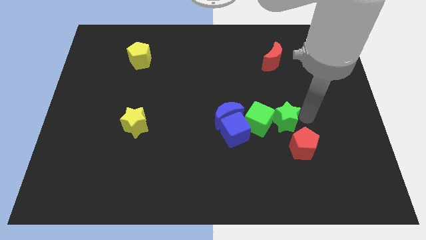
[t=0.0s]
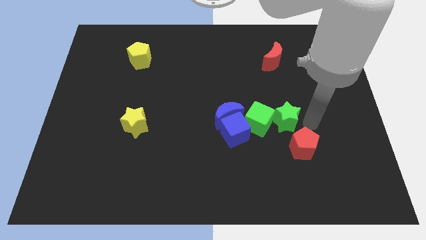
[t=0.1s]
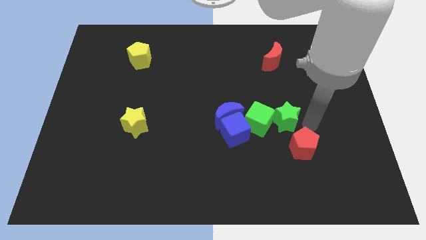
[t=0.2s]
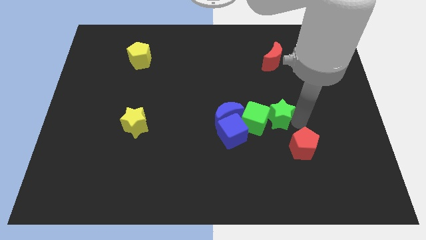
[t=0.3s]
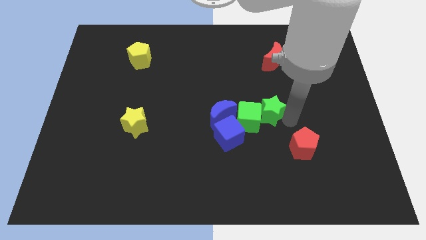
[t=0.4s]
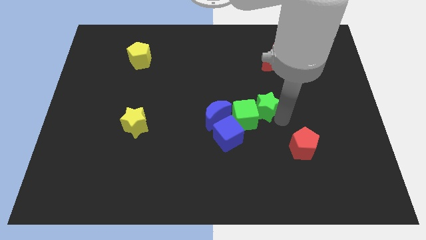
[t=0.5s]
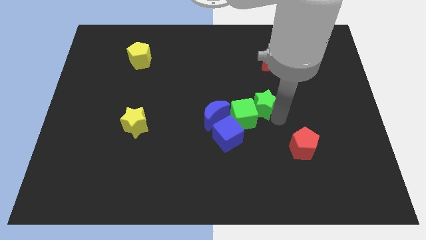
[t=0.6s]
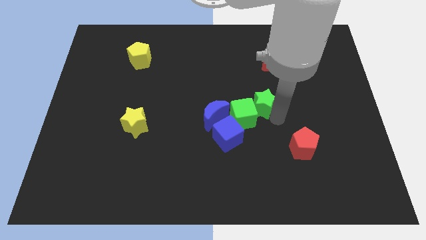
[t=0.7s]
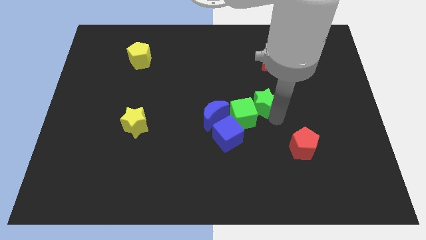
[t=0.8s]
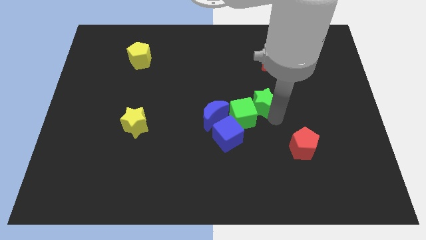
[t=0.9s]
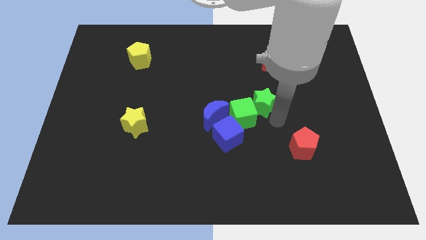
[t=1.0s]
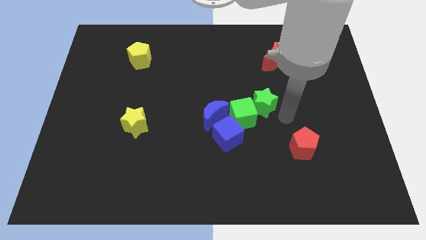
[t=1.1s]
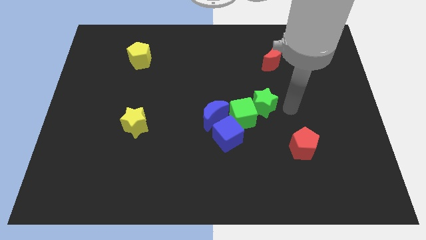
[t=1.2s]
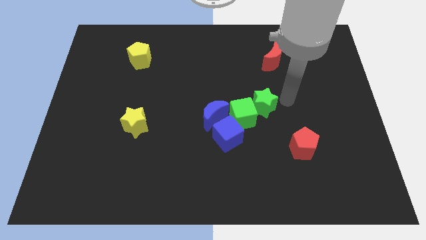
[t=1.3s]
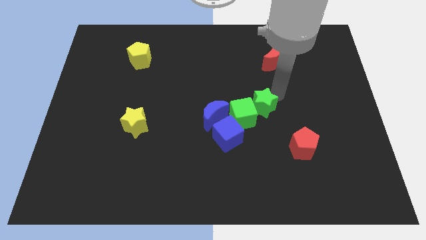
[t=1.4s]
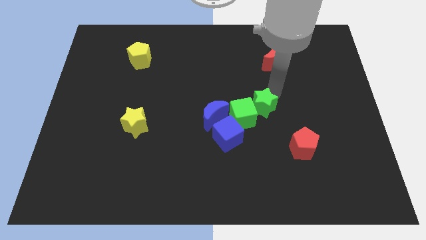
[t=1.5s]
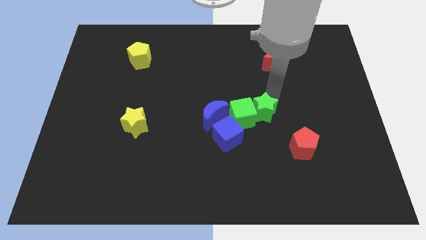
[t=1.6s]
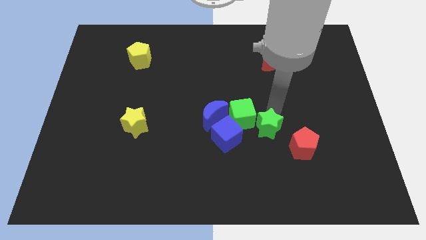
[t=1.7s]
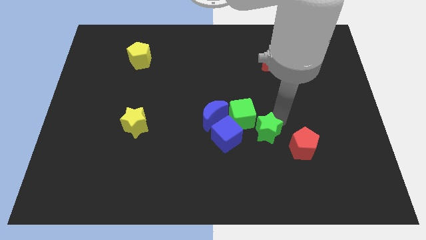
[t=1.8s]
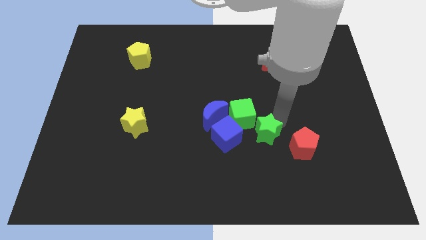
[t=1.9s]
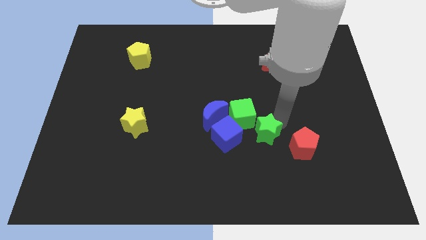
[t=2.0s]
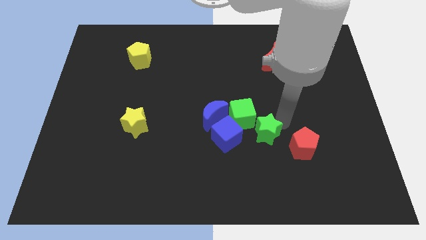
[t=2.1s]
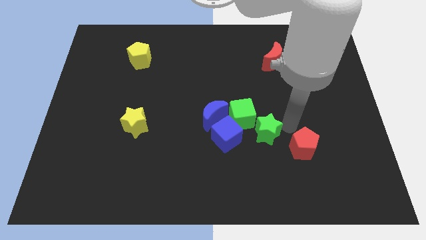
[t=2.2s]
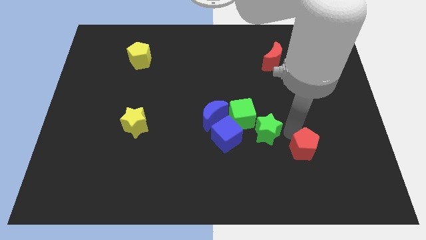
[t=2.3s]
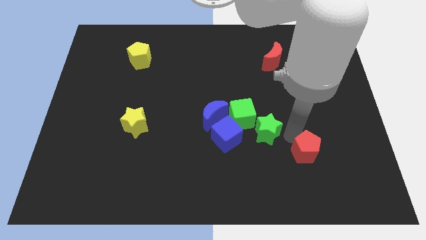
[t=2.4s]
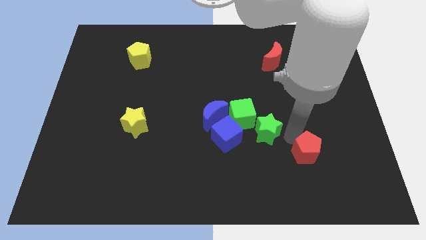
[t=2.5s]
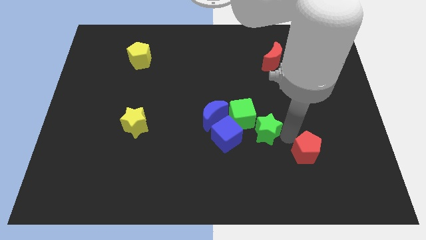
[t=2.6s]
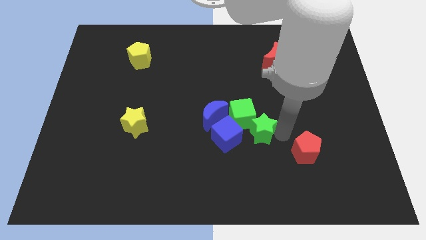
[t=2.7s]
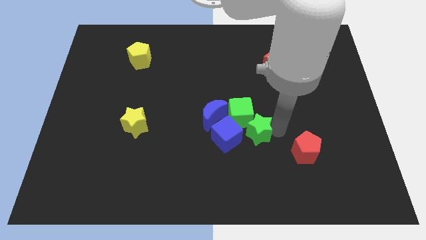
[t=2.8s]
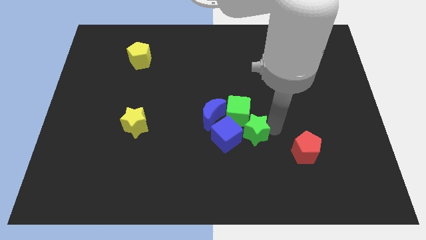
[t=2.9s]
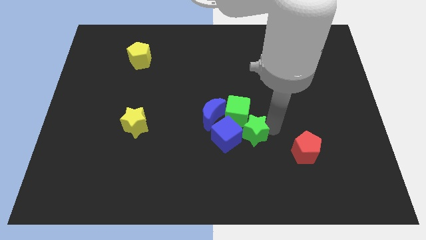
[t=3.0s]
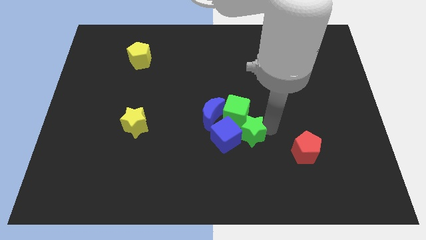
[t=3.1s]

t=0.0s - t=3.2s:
push the green star diagonal to the green cube

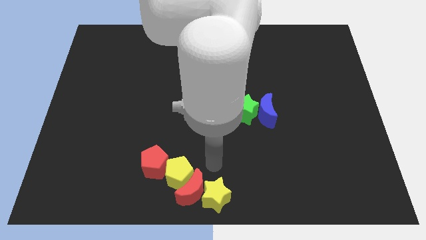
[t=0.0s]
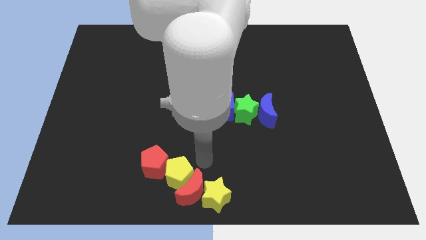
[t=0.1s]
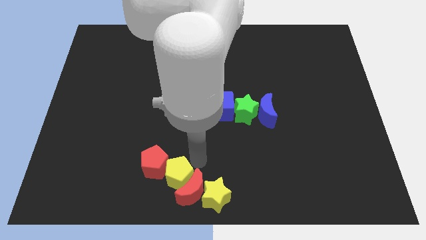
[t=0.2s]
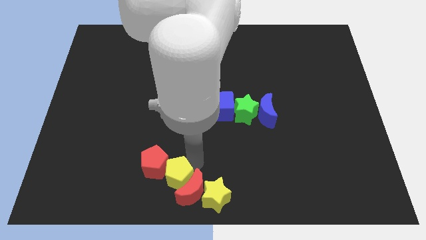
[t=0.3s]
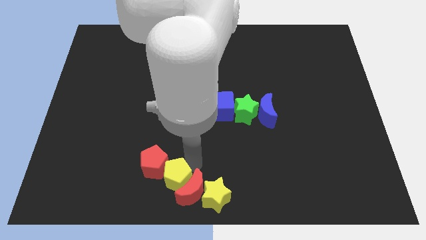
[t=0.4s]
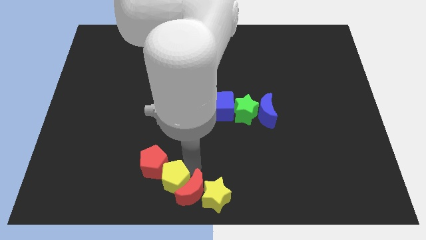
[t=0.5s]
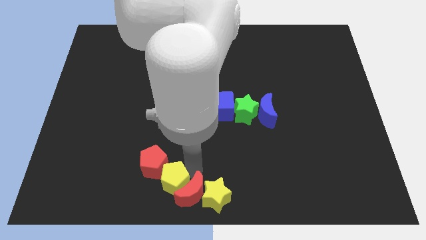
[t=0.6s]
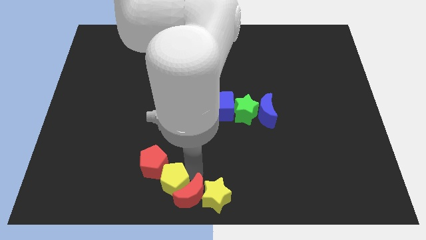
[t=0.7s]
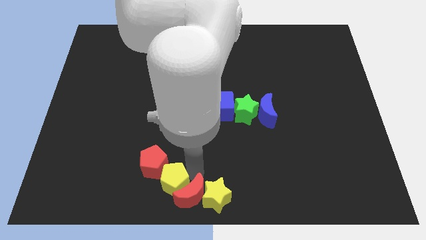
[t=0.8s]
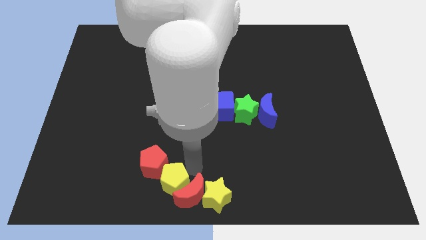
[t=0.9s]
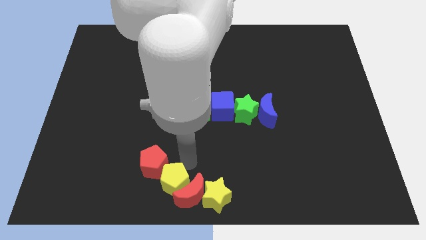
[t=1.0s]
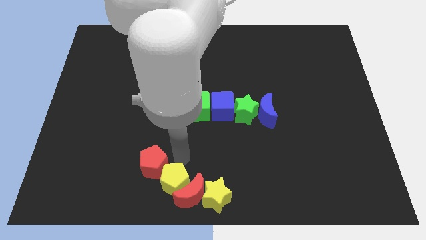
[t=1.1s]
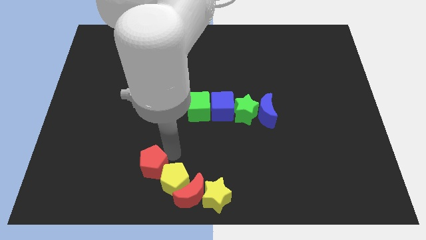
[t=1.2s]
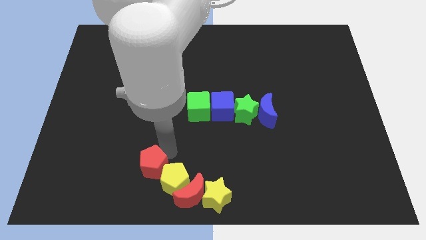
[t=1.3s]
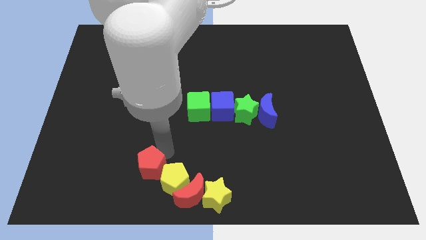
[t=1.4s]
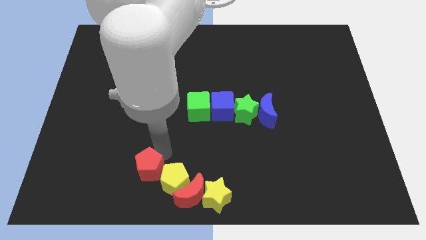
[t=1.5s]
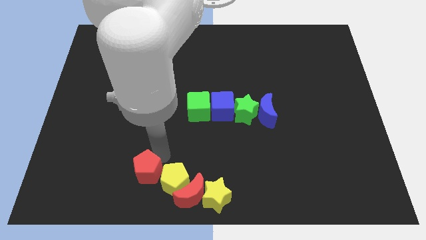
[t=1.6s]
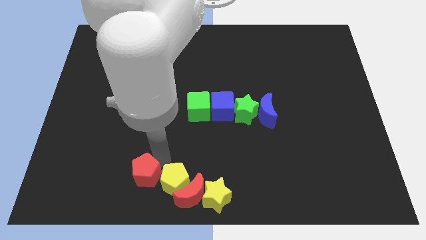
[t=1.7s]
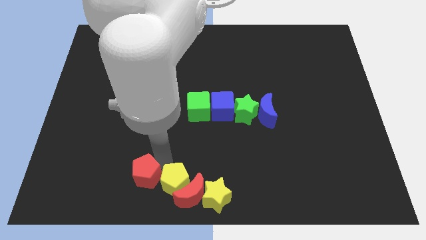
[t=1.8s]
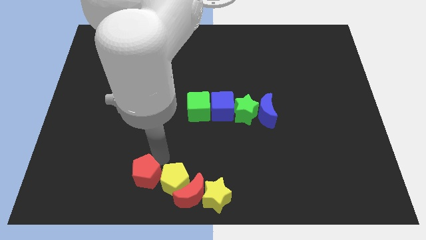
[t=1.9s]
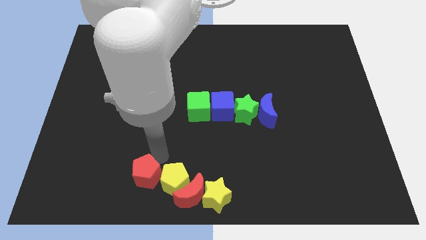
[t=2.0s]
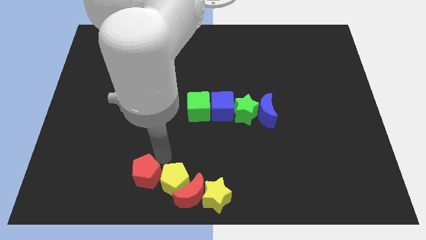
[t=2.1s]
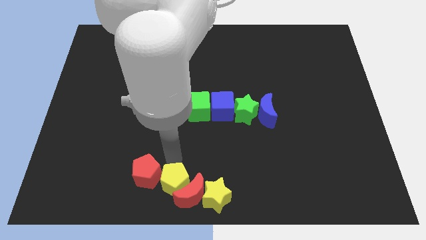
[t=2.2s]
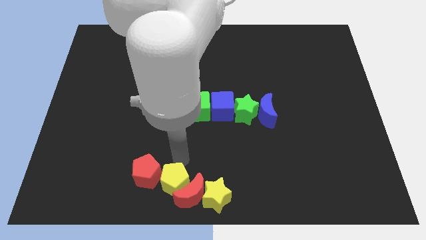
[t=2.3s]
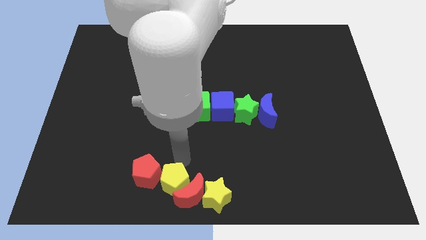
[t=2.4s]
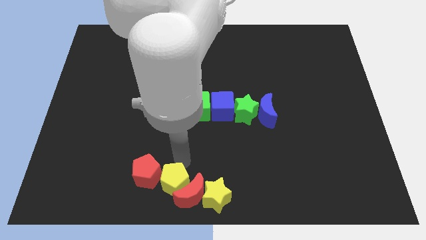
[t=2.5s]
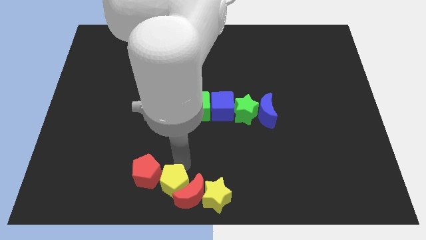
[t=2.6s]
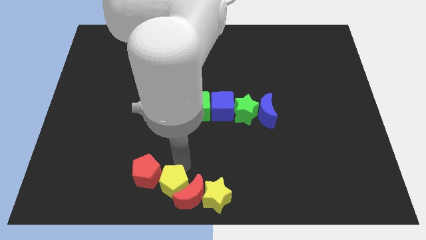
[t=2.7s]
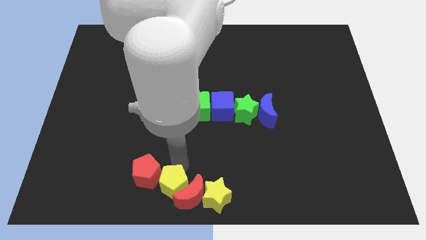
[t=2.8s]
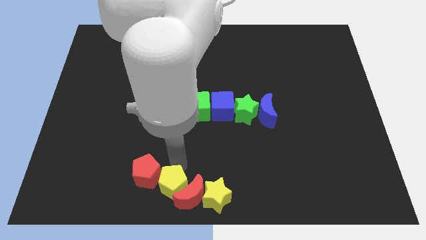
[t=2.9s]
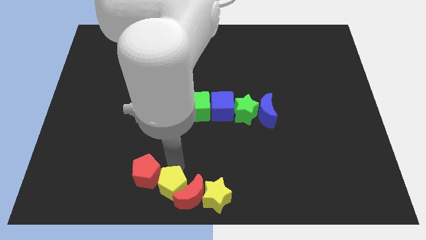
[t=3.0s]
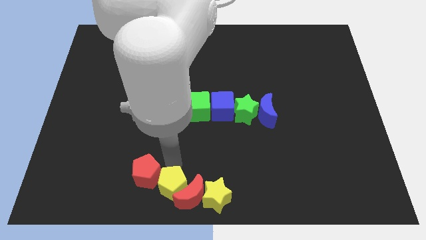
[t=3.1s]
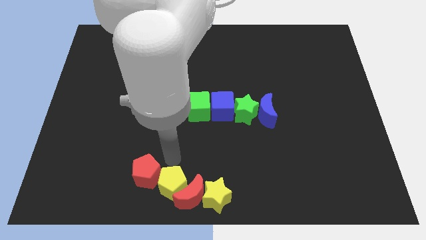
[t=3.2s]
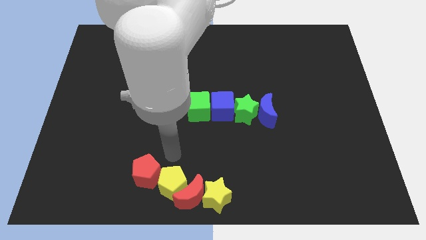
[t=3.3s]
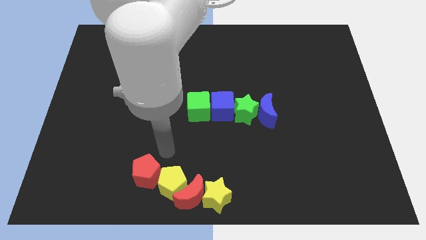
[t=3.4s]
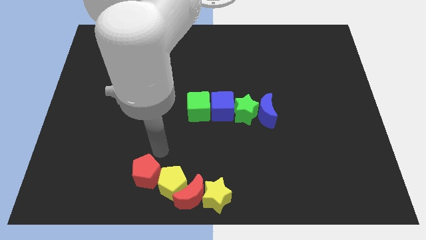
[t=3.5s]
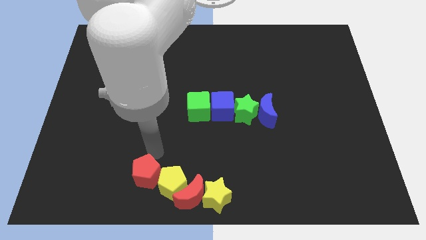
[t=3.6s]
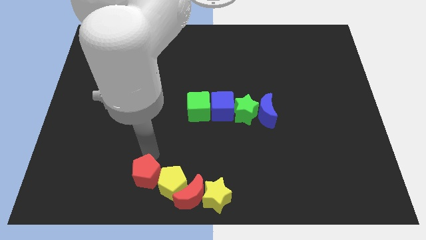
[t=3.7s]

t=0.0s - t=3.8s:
adjust the yellow blocks and red blocks to form a vertical line

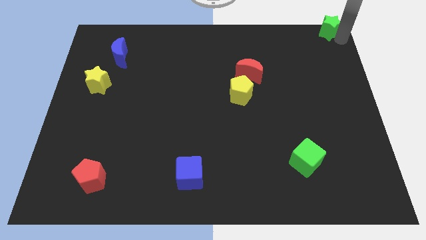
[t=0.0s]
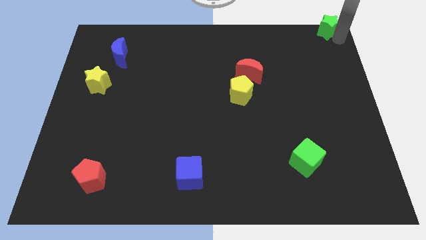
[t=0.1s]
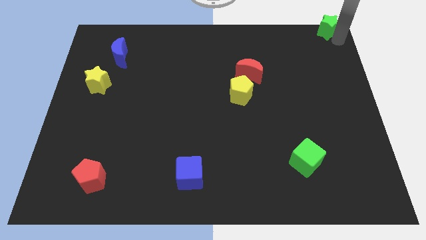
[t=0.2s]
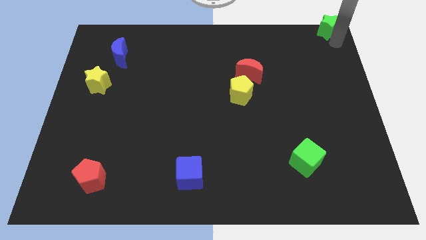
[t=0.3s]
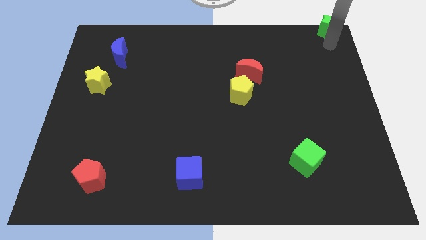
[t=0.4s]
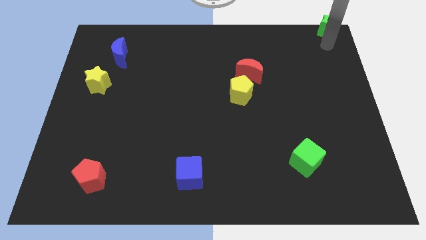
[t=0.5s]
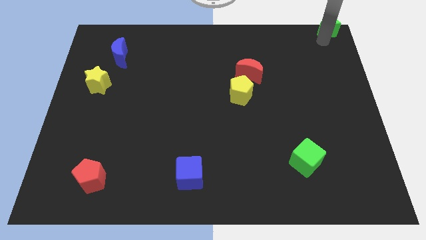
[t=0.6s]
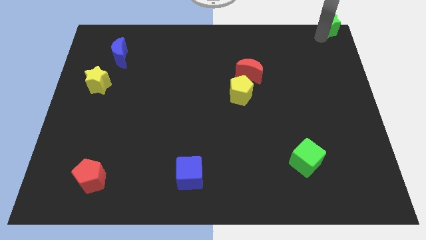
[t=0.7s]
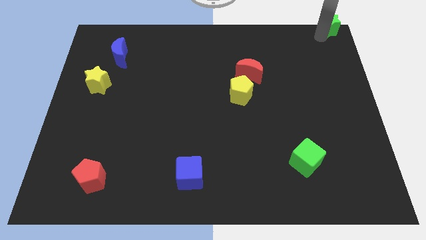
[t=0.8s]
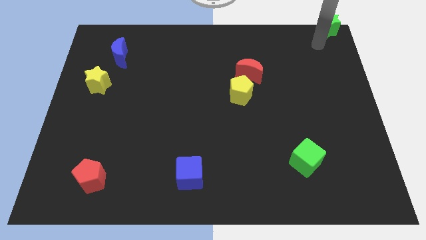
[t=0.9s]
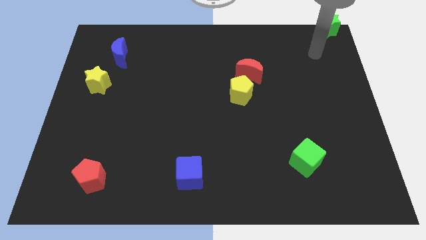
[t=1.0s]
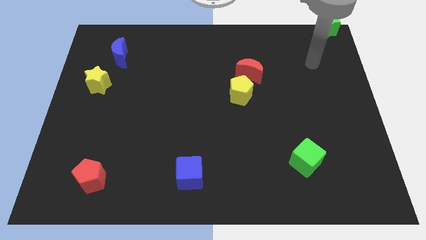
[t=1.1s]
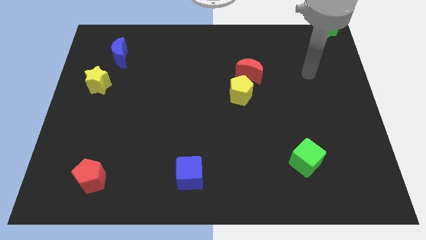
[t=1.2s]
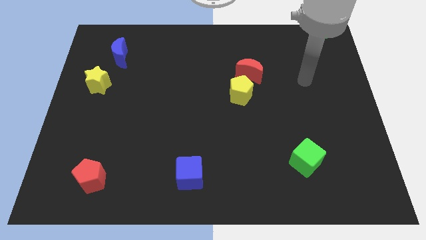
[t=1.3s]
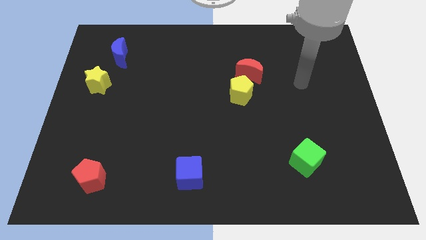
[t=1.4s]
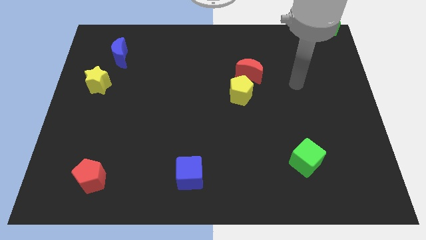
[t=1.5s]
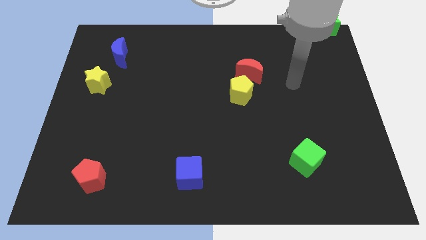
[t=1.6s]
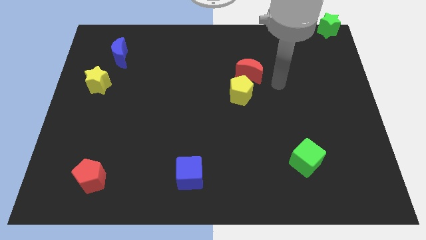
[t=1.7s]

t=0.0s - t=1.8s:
move the arm near the red crescent
